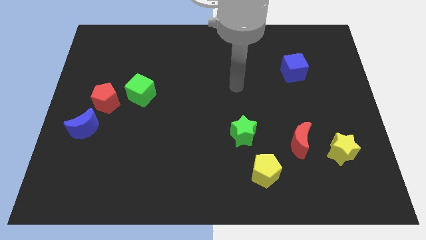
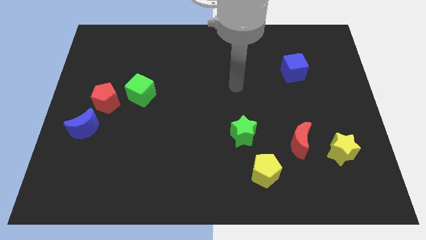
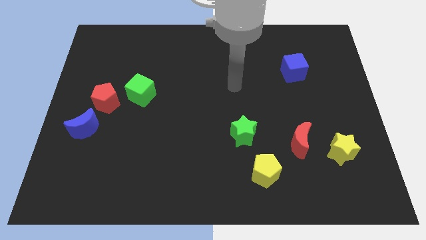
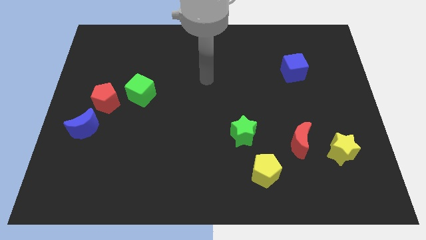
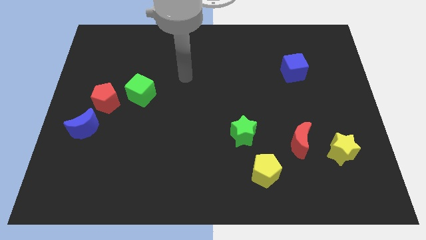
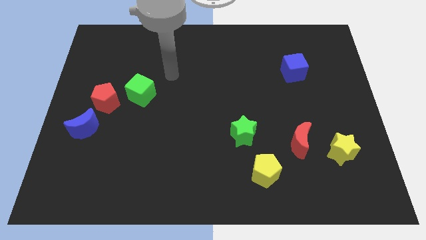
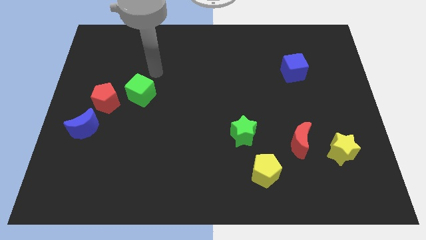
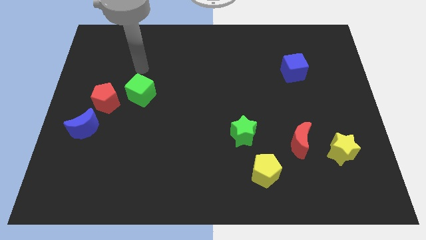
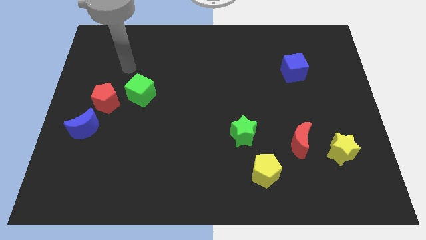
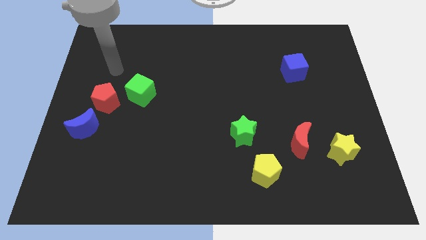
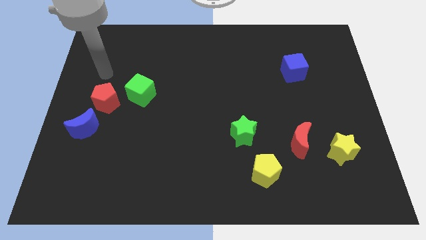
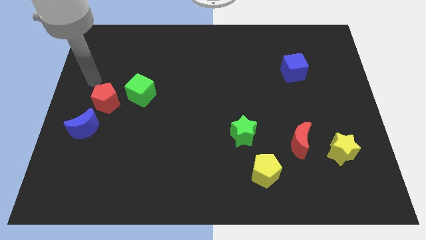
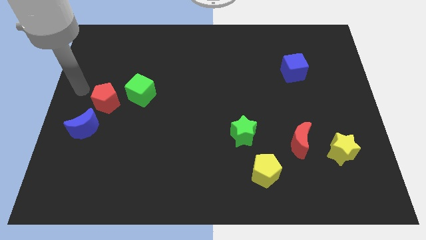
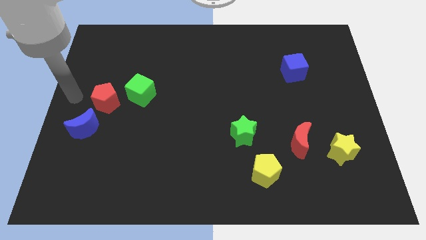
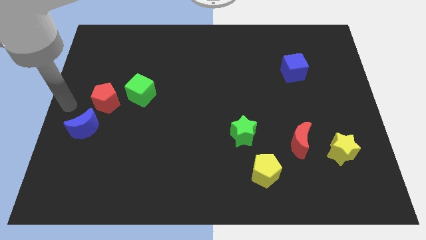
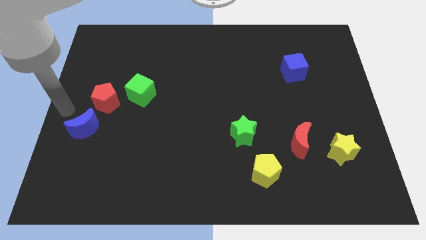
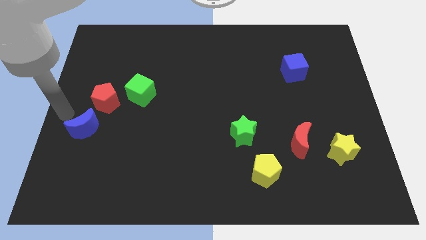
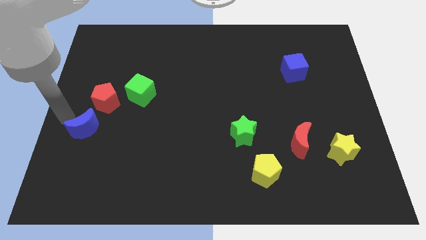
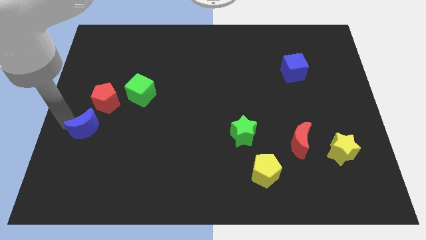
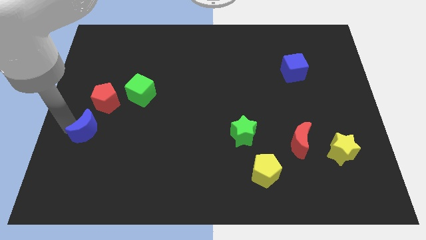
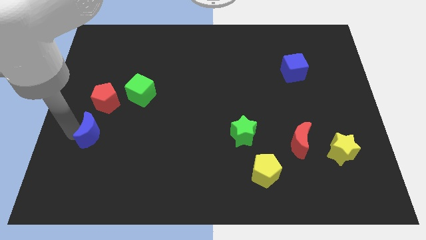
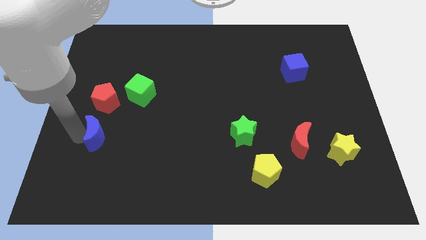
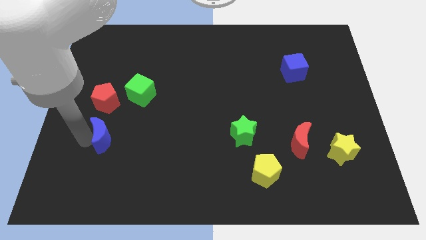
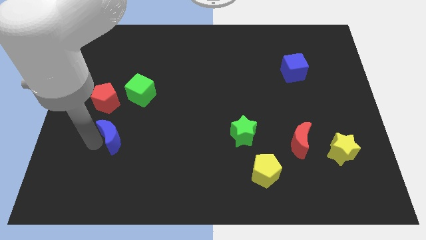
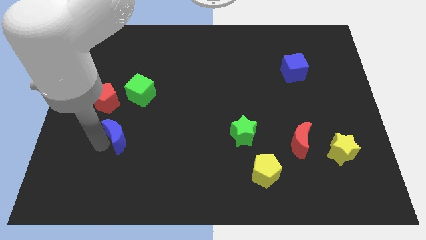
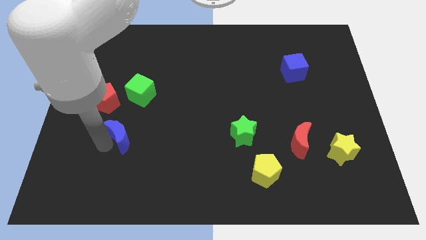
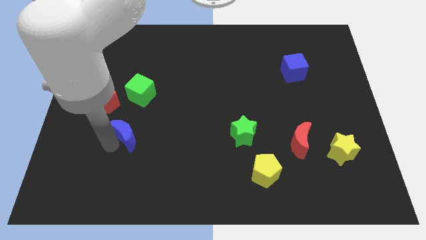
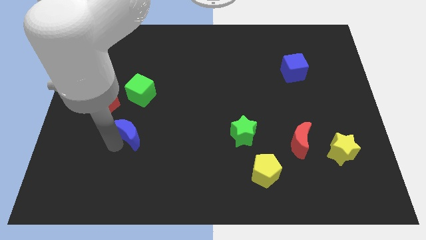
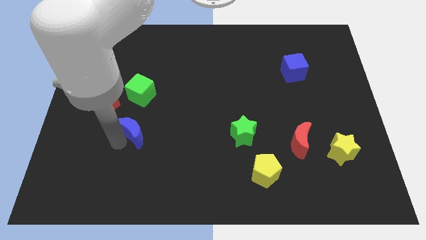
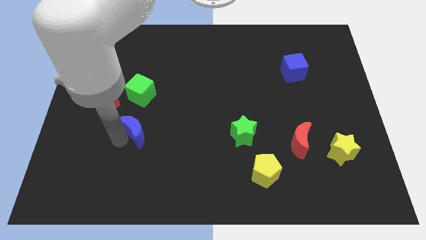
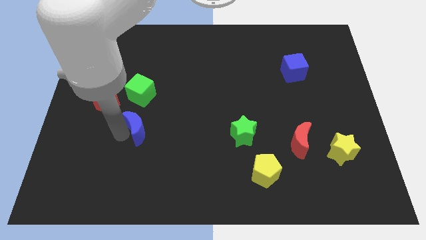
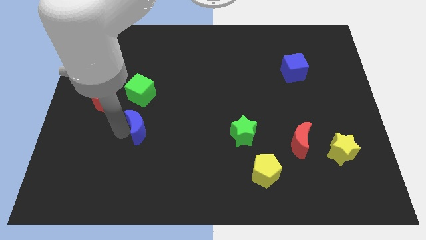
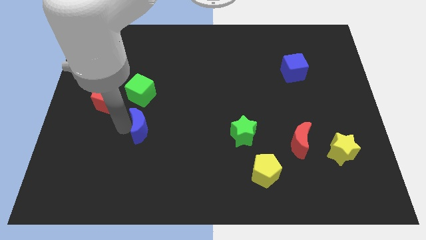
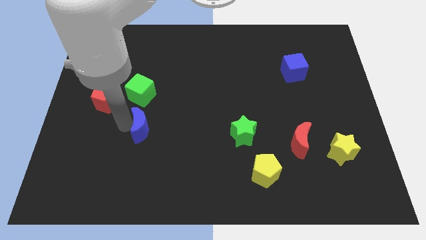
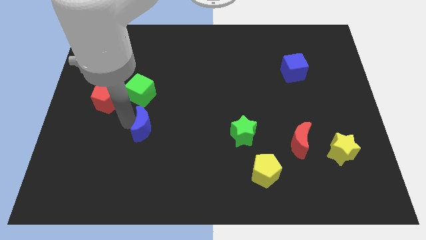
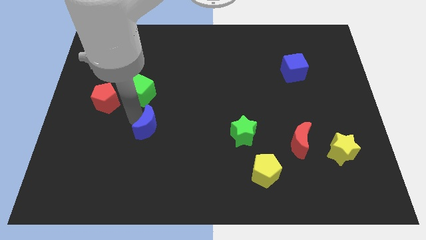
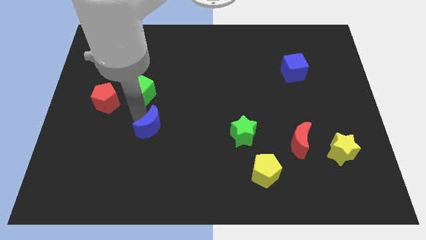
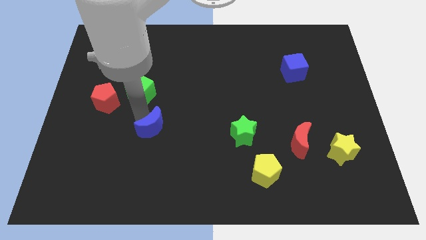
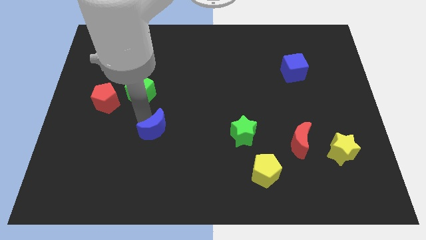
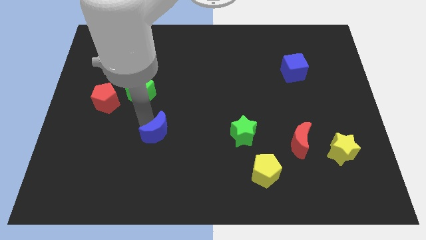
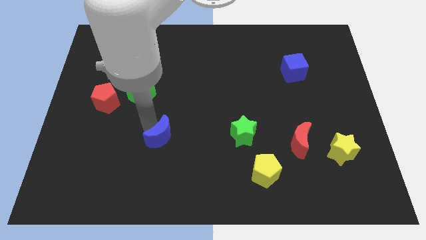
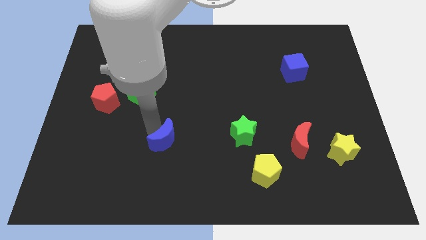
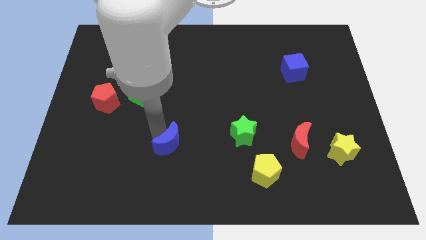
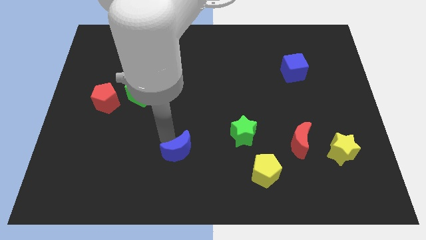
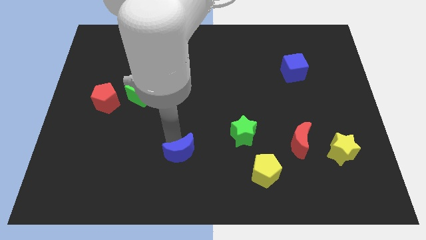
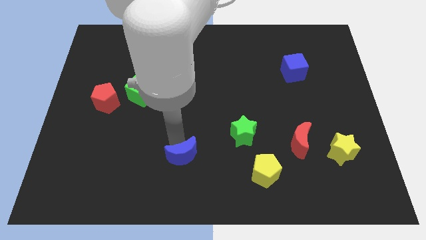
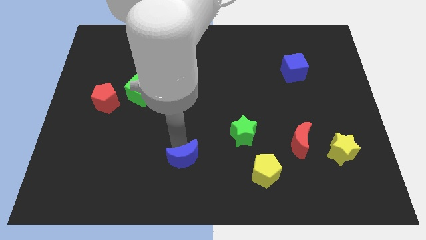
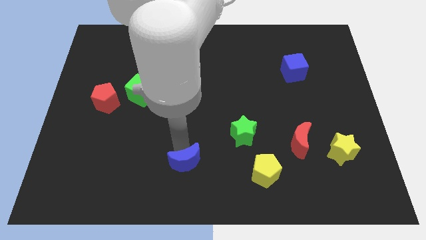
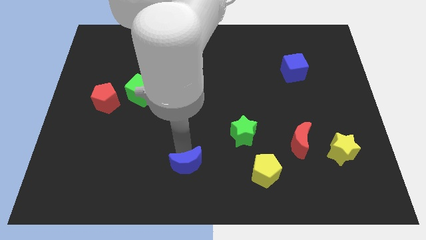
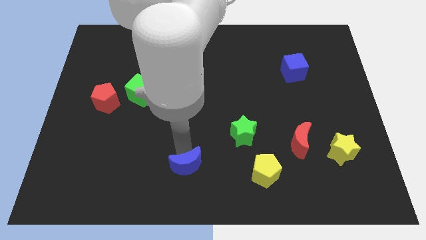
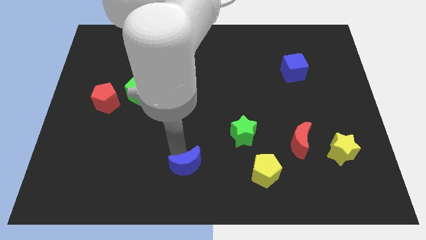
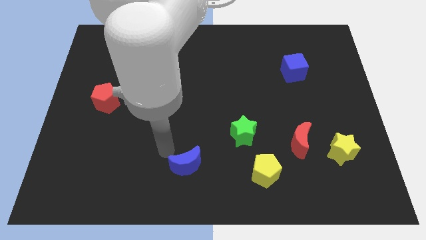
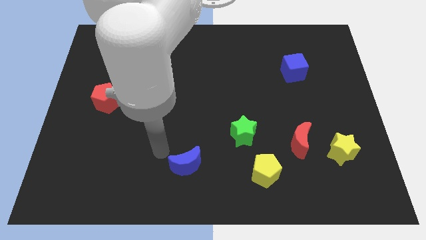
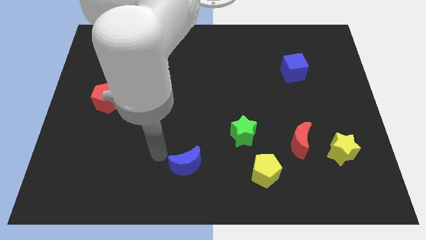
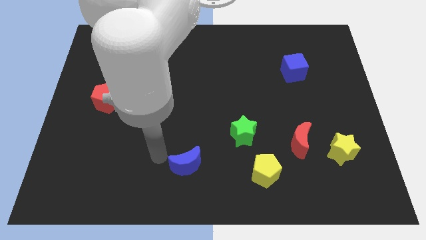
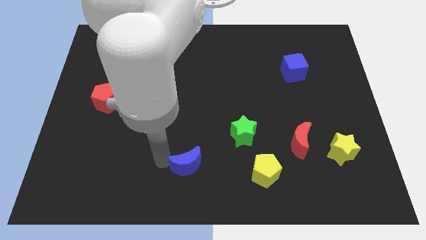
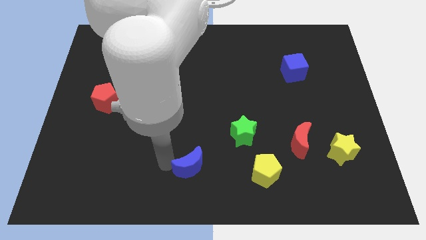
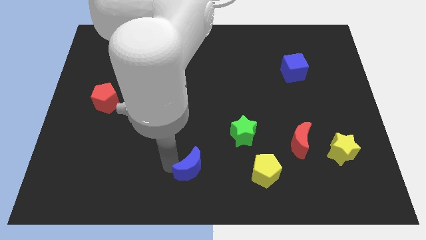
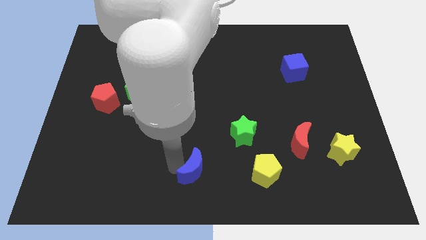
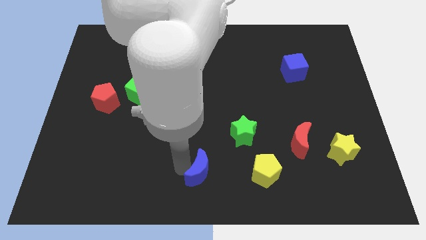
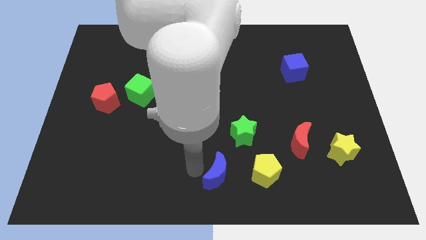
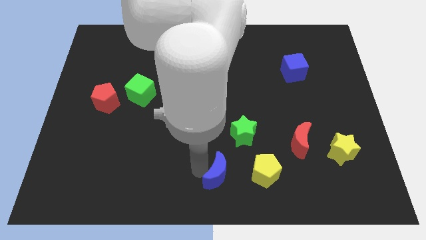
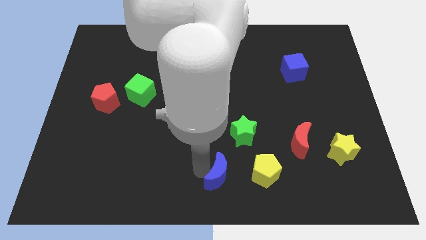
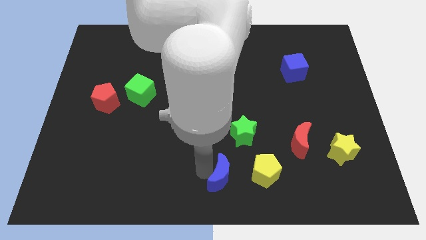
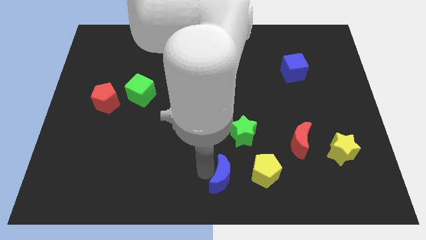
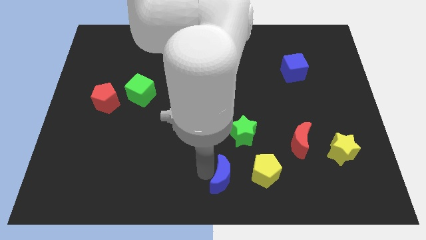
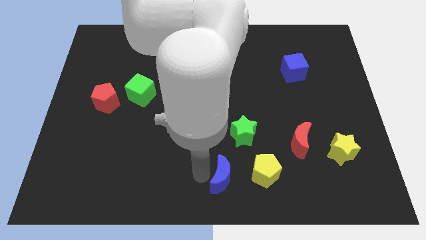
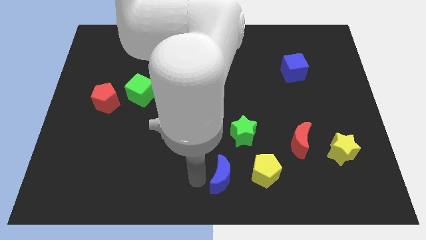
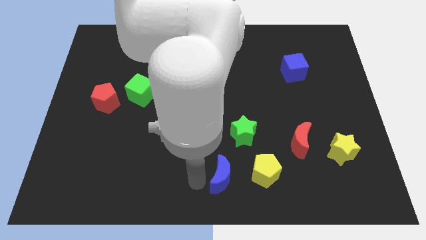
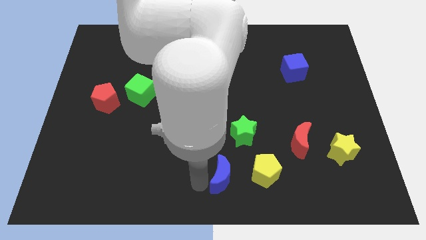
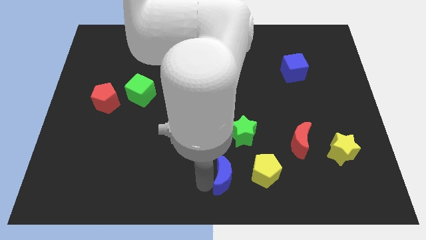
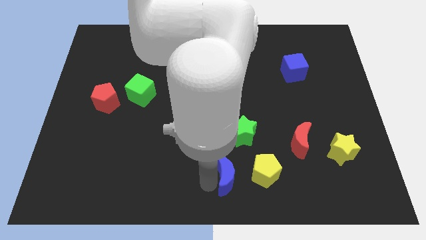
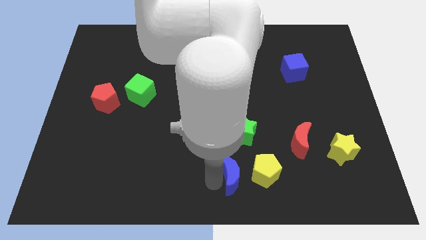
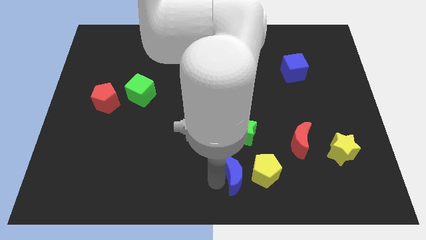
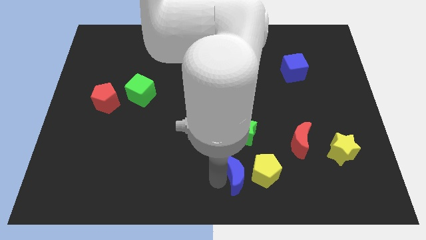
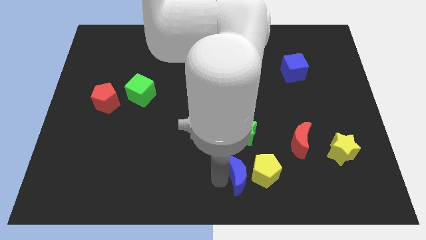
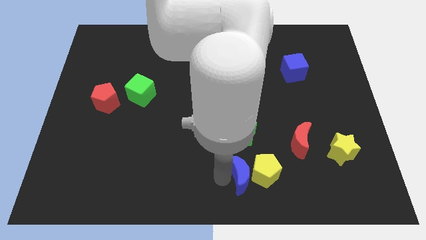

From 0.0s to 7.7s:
move the blue moon towards the yellow pentagon

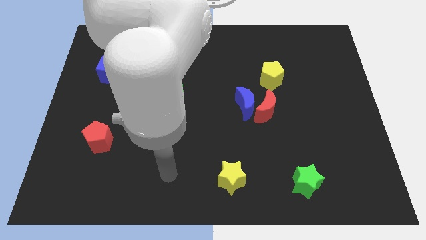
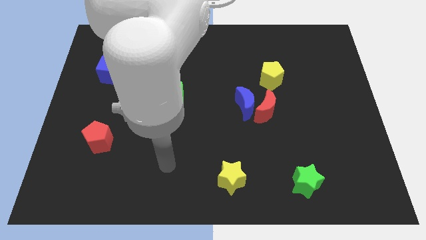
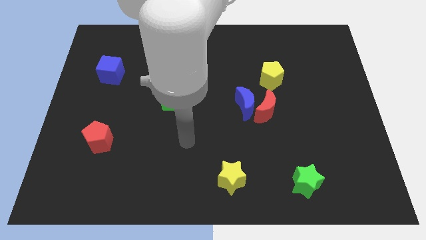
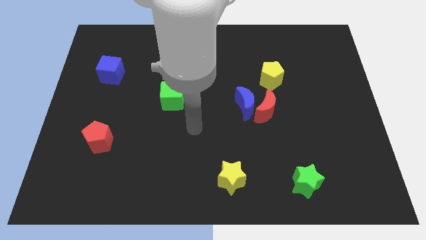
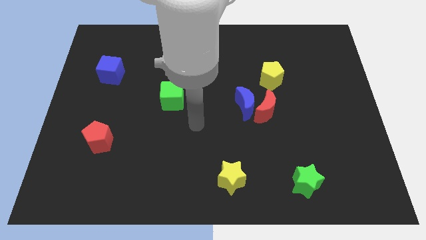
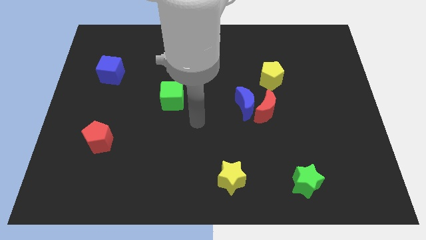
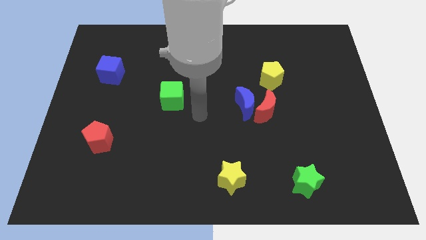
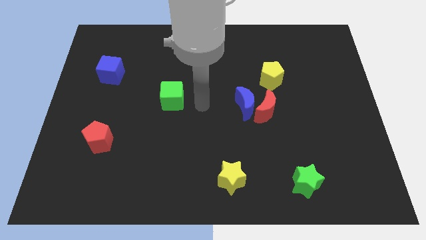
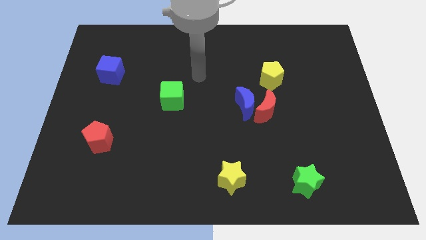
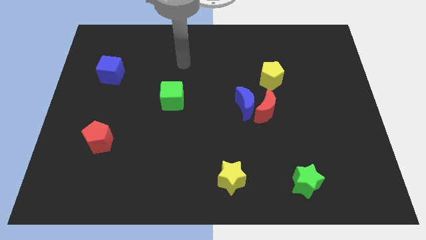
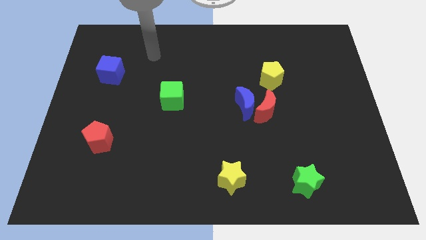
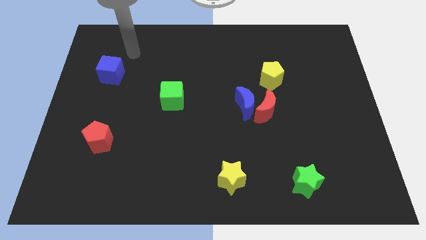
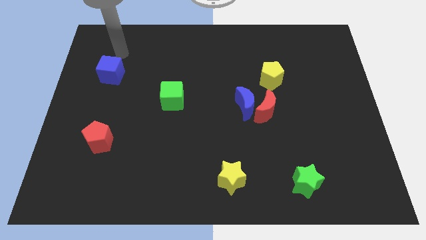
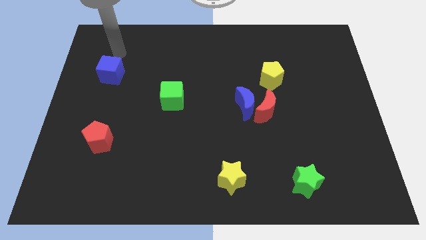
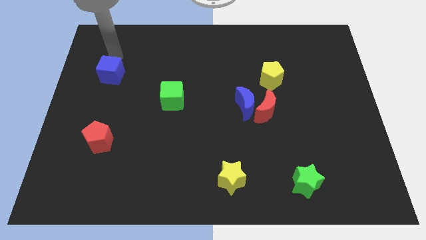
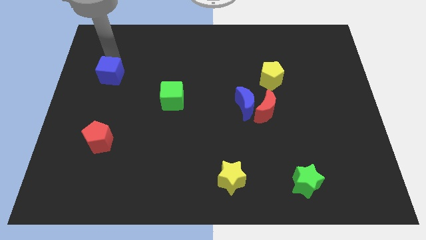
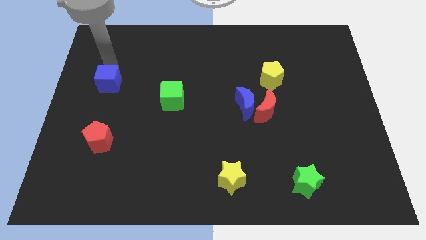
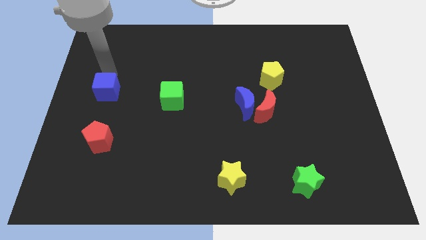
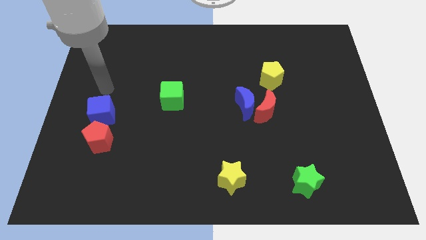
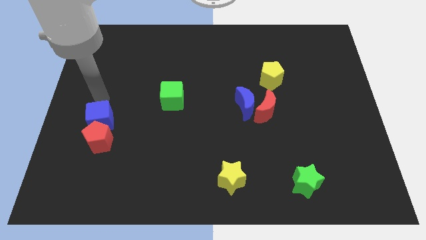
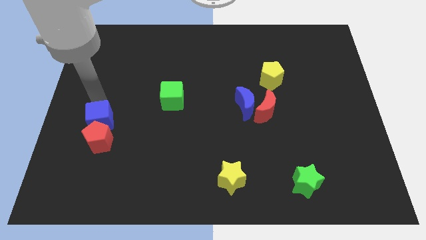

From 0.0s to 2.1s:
put the blue cube to the red pentagon
